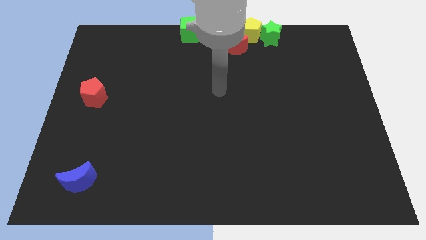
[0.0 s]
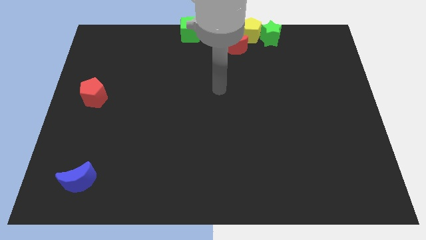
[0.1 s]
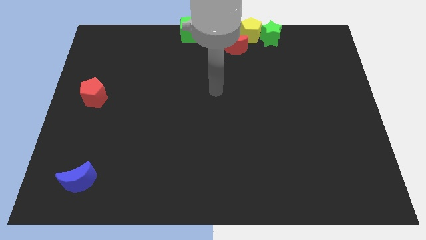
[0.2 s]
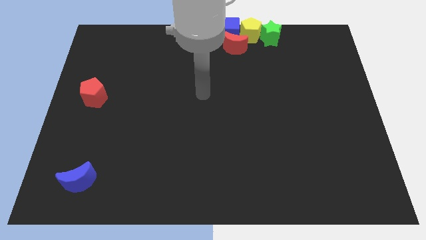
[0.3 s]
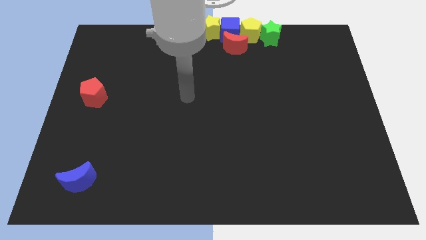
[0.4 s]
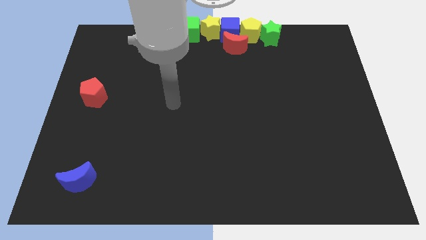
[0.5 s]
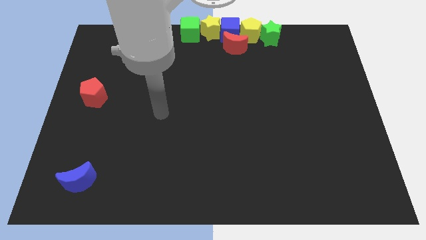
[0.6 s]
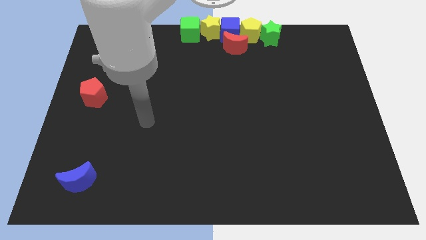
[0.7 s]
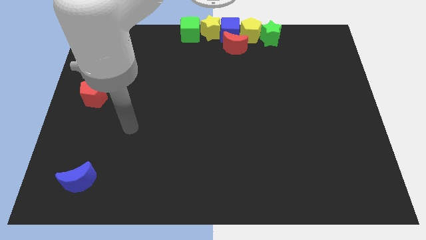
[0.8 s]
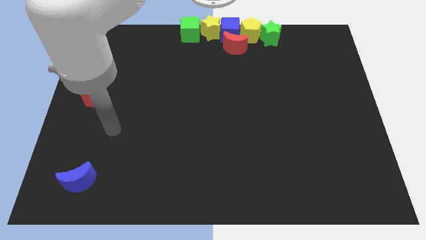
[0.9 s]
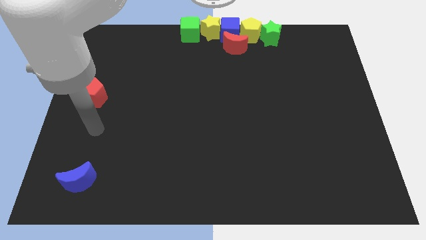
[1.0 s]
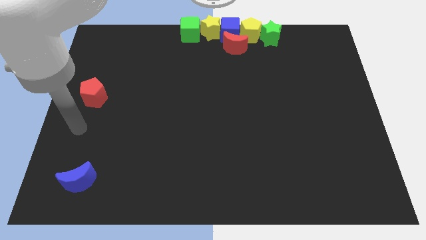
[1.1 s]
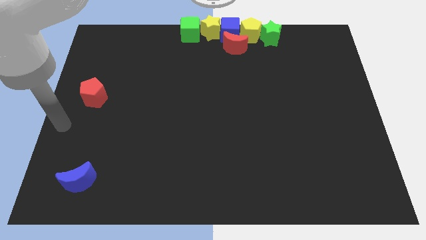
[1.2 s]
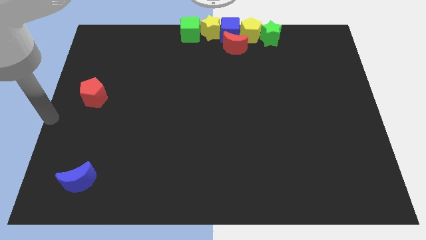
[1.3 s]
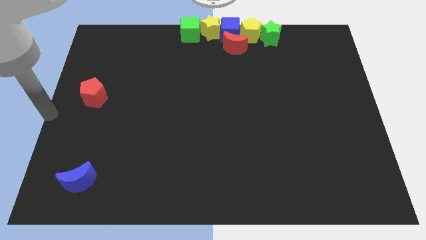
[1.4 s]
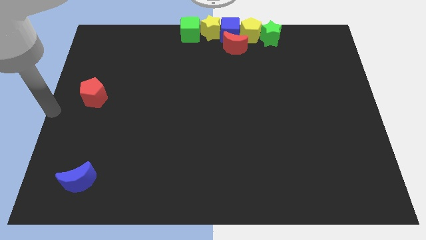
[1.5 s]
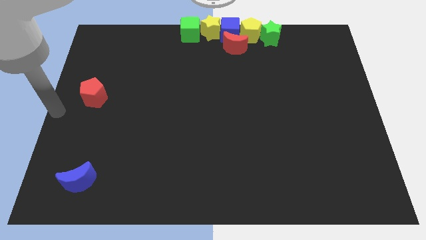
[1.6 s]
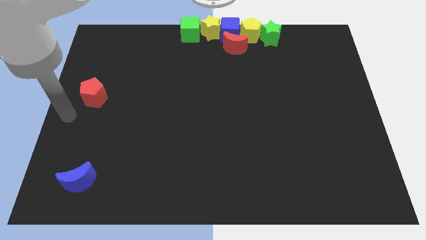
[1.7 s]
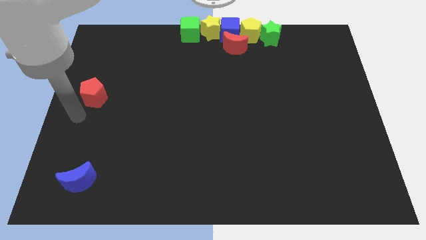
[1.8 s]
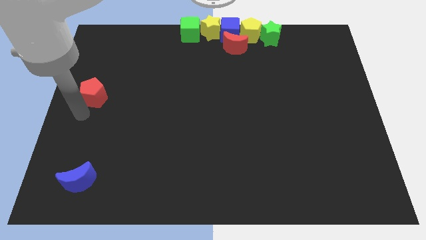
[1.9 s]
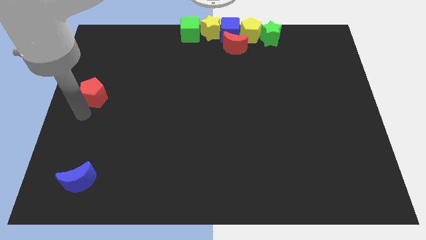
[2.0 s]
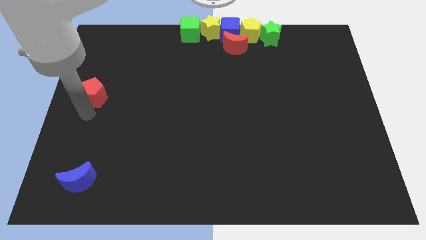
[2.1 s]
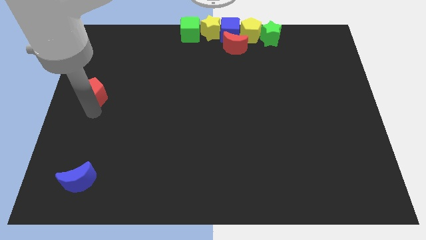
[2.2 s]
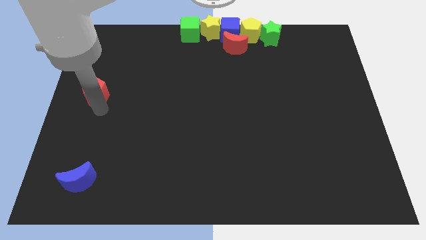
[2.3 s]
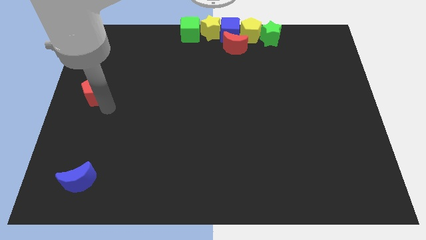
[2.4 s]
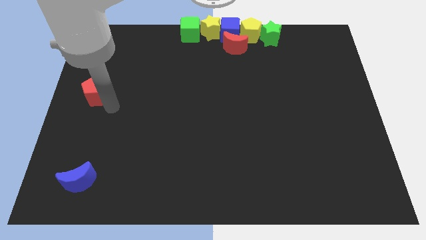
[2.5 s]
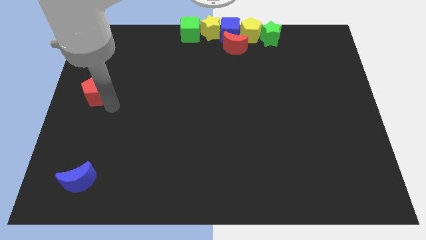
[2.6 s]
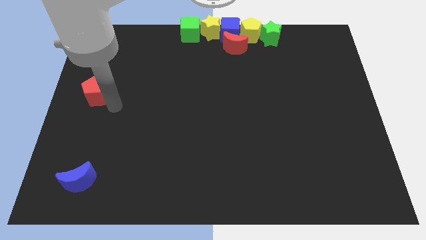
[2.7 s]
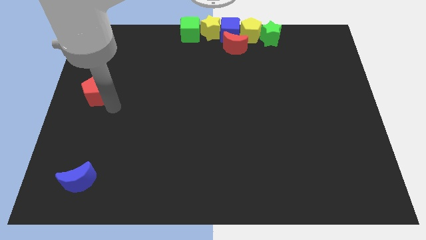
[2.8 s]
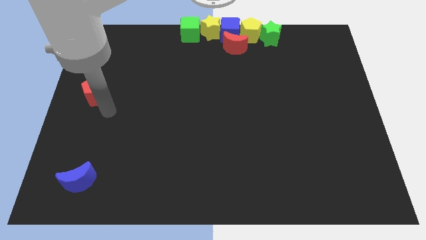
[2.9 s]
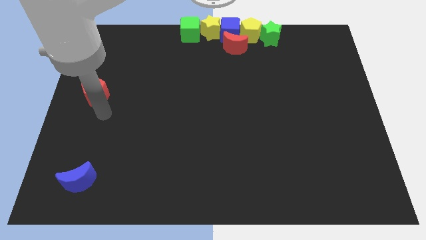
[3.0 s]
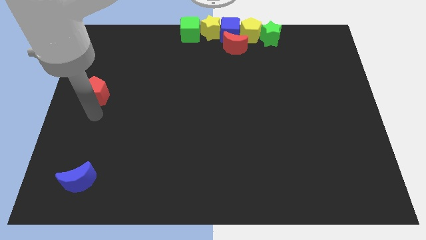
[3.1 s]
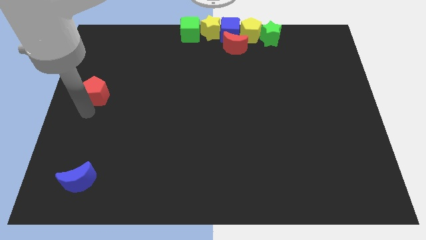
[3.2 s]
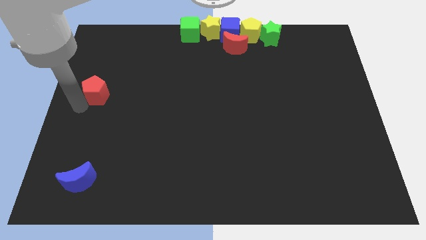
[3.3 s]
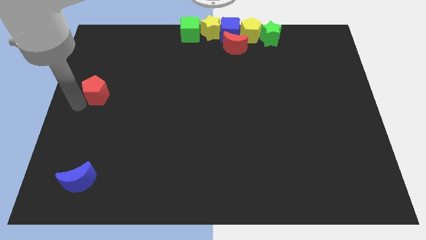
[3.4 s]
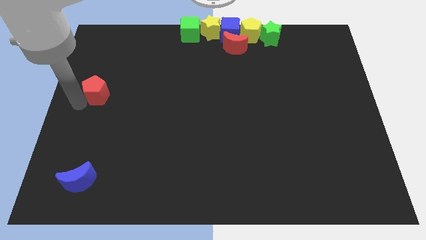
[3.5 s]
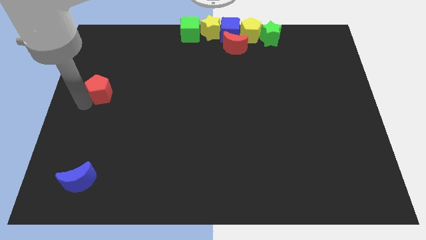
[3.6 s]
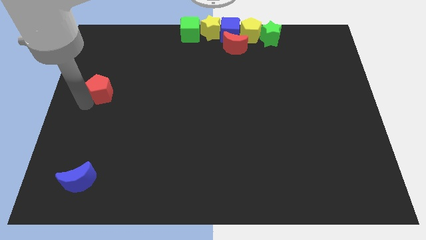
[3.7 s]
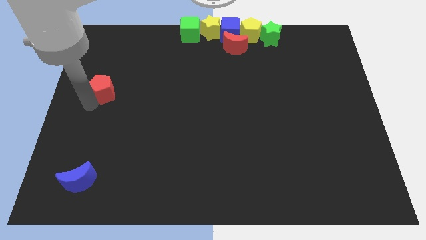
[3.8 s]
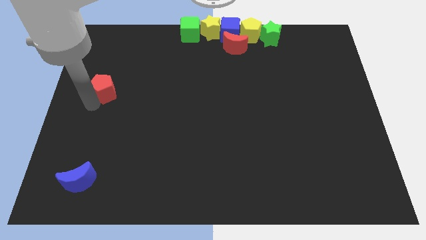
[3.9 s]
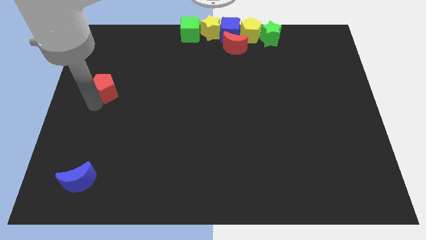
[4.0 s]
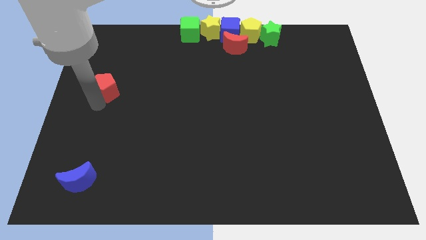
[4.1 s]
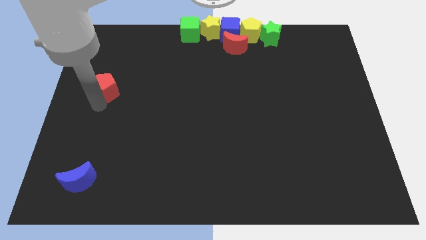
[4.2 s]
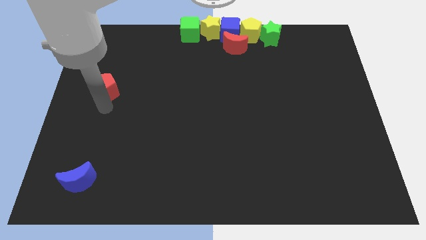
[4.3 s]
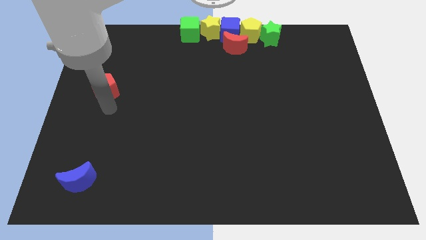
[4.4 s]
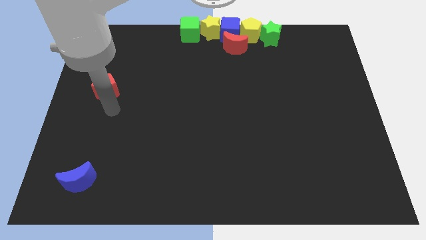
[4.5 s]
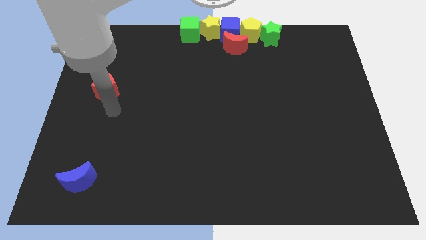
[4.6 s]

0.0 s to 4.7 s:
slightly push the red pentagon to the top of the board

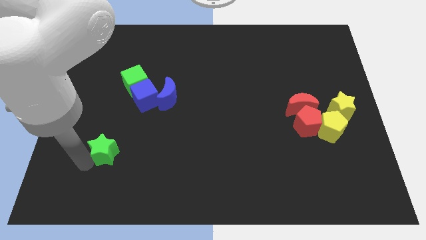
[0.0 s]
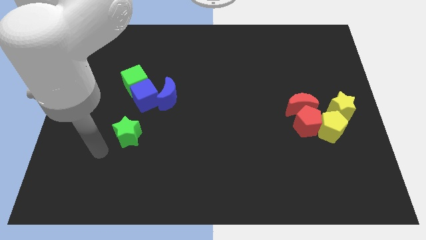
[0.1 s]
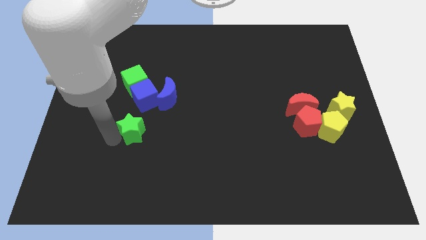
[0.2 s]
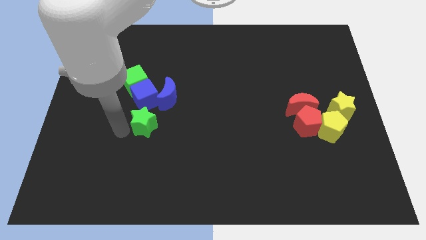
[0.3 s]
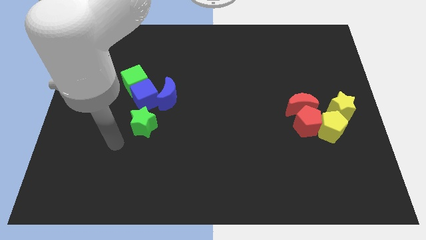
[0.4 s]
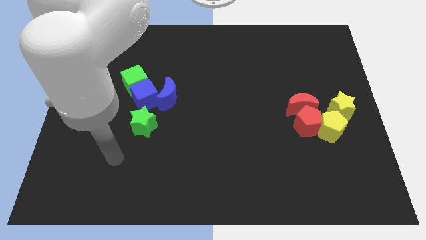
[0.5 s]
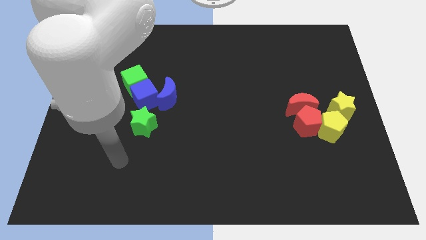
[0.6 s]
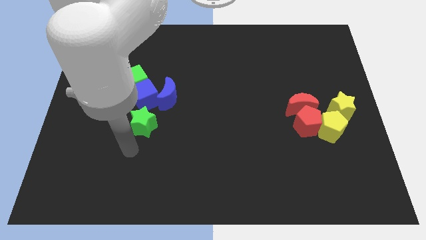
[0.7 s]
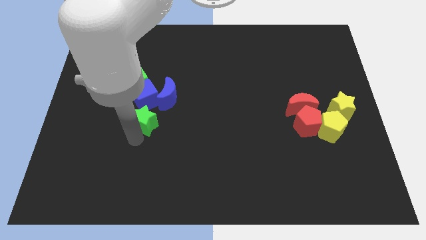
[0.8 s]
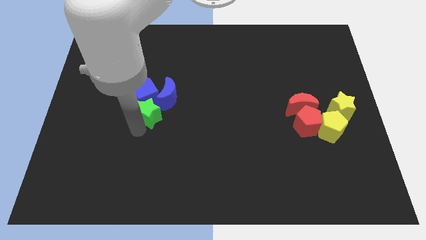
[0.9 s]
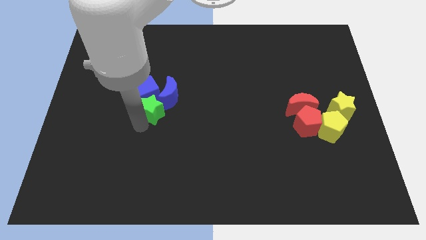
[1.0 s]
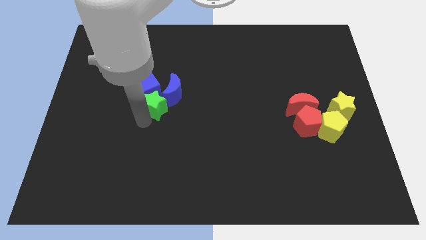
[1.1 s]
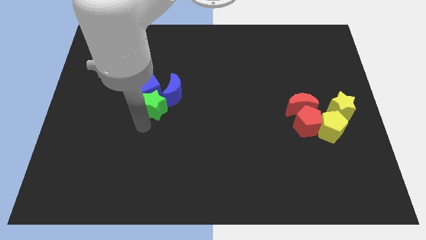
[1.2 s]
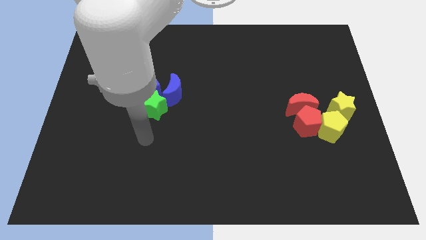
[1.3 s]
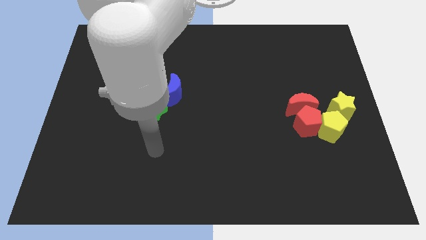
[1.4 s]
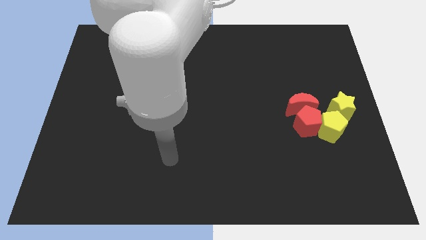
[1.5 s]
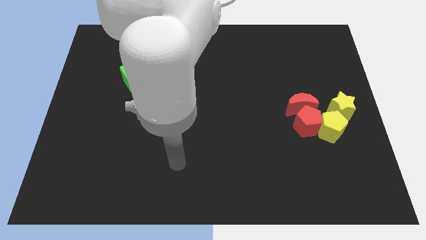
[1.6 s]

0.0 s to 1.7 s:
move the green star to the bottom of the blue cube

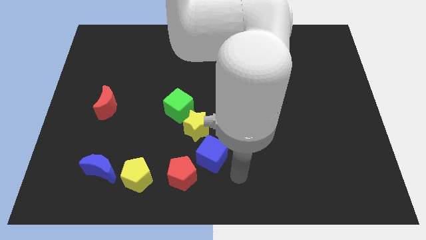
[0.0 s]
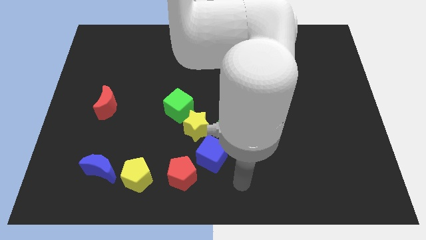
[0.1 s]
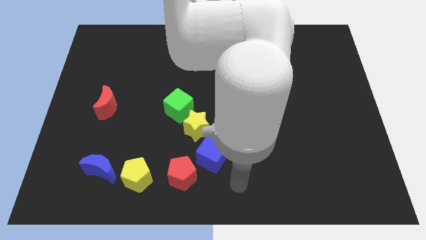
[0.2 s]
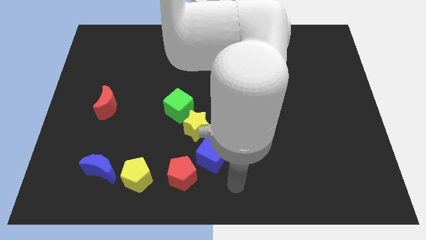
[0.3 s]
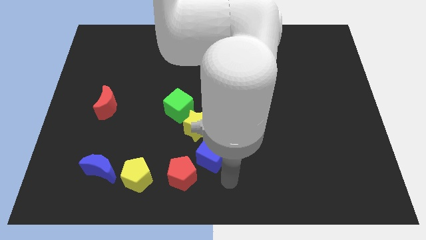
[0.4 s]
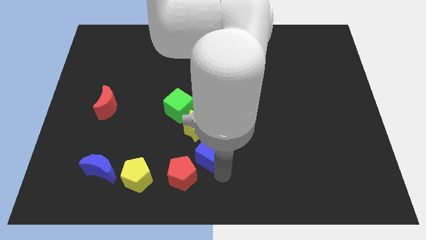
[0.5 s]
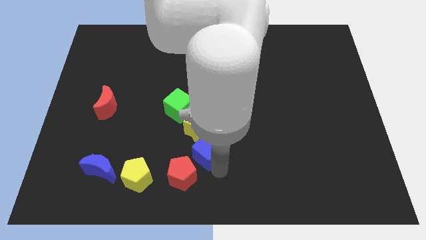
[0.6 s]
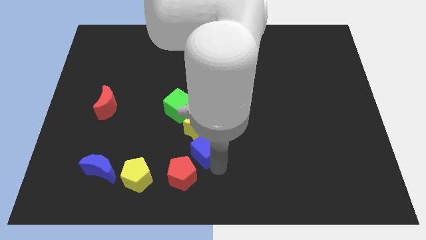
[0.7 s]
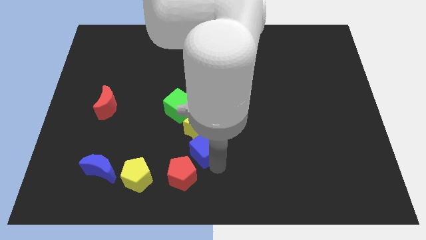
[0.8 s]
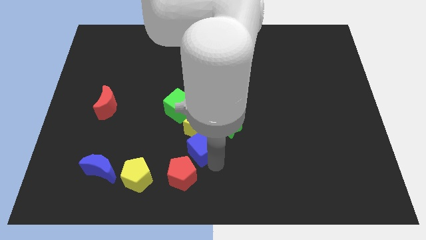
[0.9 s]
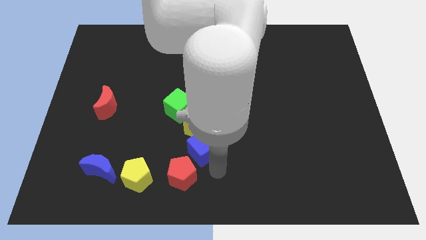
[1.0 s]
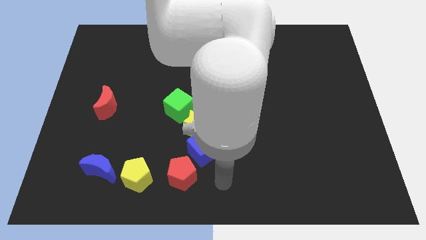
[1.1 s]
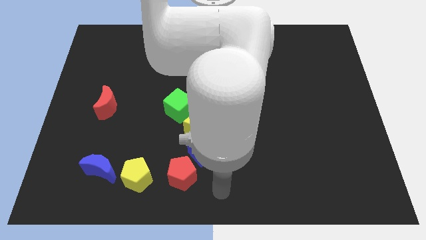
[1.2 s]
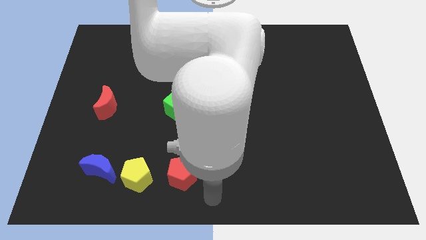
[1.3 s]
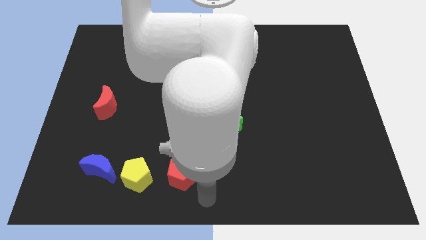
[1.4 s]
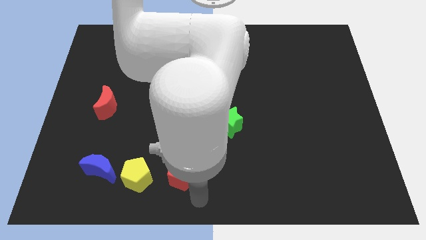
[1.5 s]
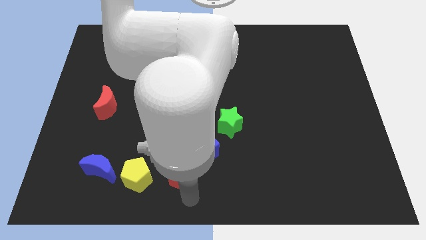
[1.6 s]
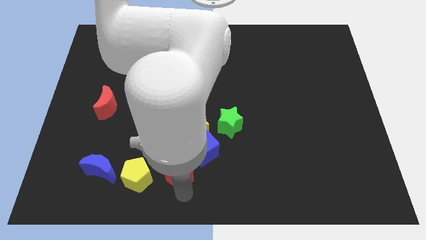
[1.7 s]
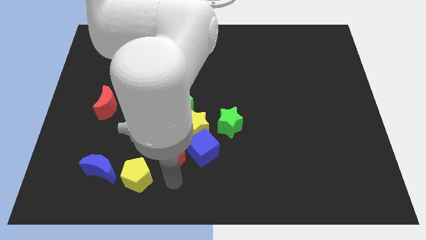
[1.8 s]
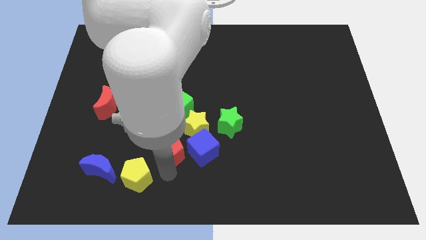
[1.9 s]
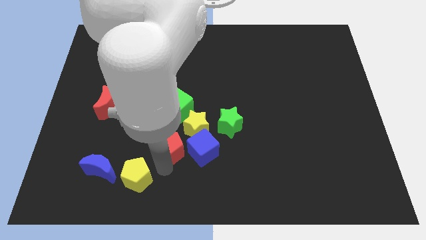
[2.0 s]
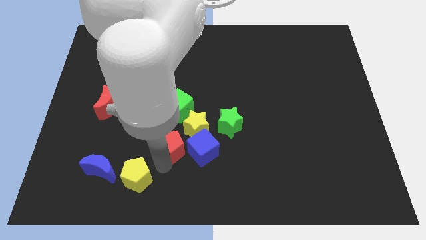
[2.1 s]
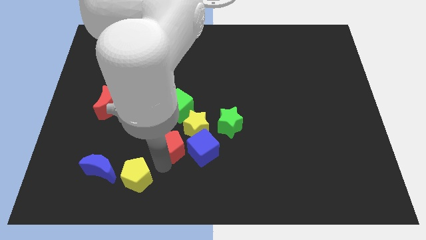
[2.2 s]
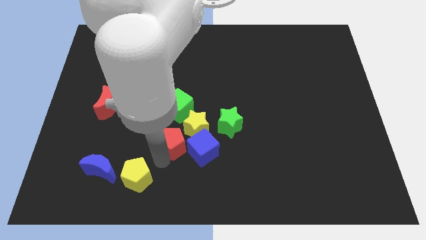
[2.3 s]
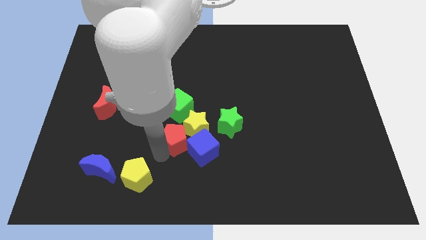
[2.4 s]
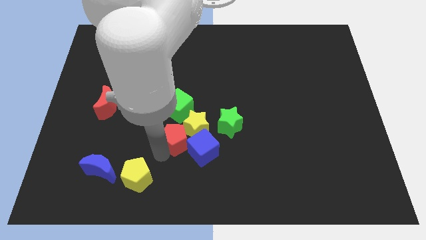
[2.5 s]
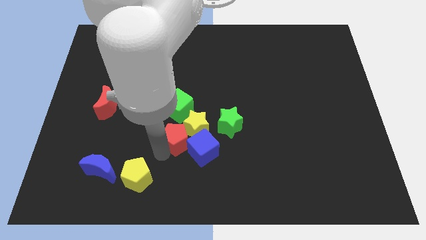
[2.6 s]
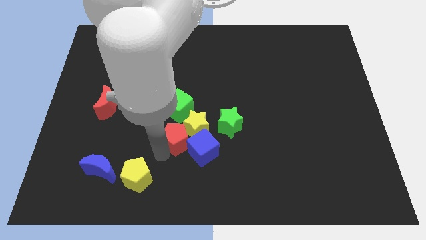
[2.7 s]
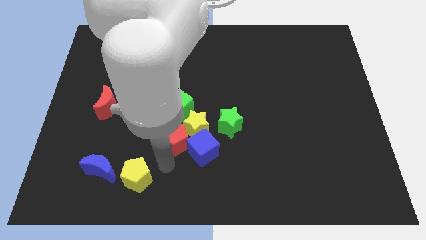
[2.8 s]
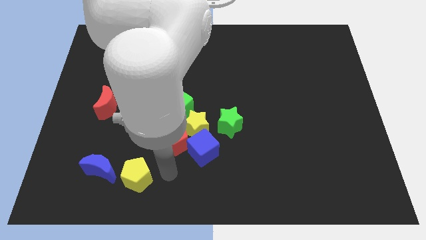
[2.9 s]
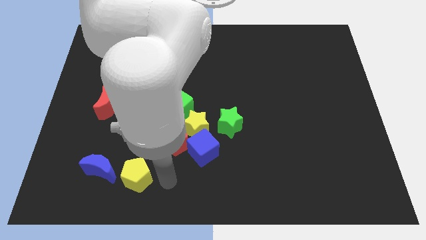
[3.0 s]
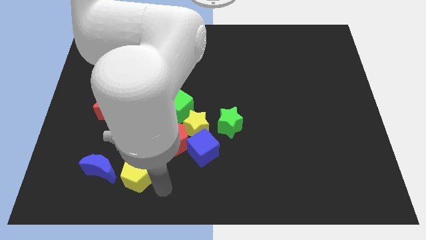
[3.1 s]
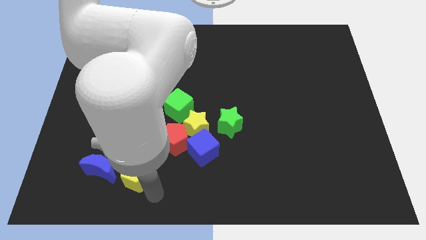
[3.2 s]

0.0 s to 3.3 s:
move red pentagon near group of blocks
